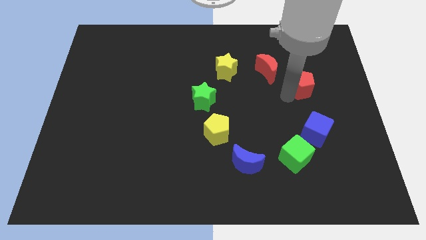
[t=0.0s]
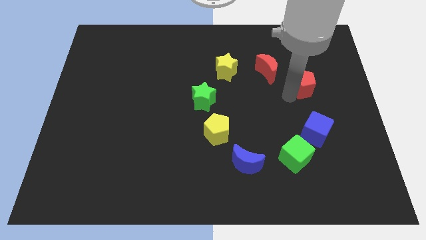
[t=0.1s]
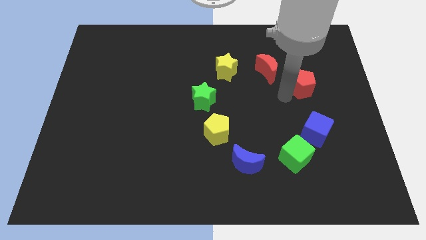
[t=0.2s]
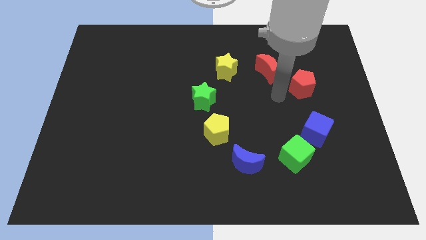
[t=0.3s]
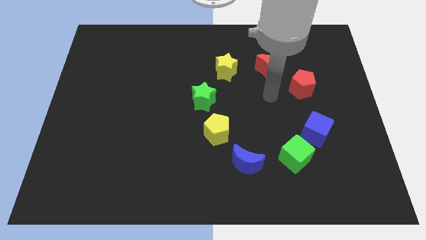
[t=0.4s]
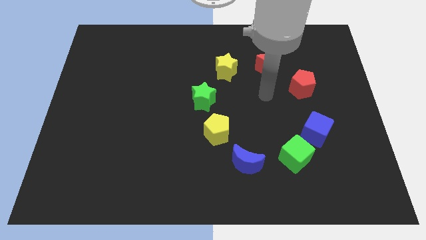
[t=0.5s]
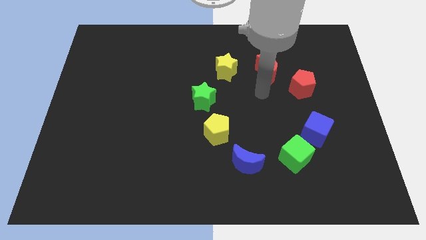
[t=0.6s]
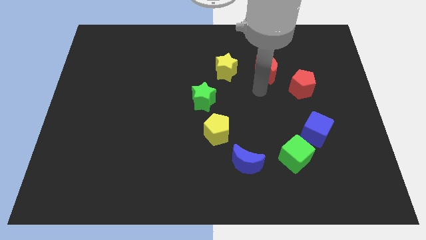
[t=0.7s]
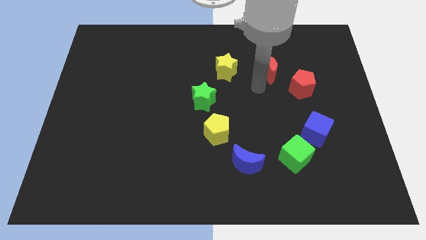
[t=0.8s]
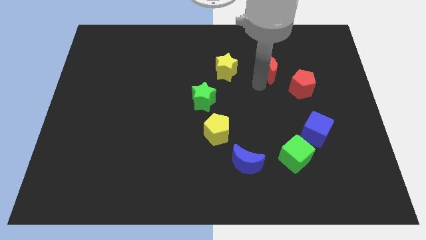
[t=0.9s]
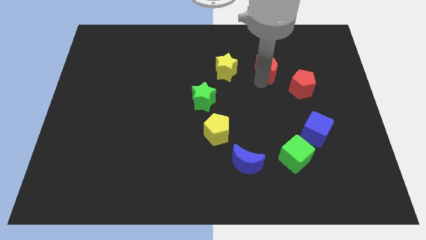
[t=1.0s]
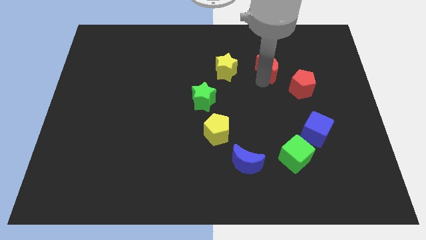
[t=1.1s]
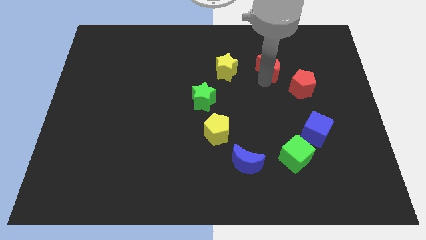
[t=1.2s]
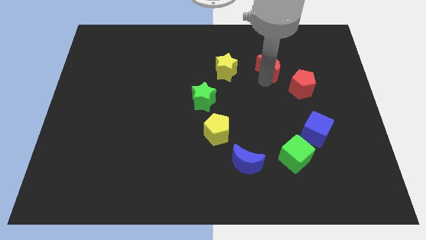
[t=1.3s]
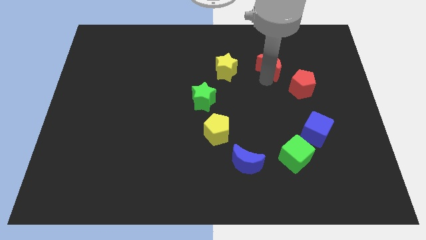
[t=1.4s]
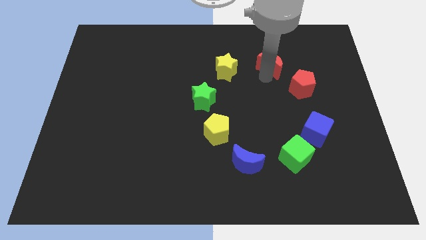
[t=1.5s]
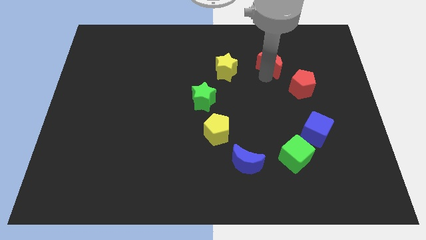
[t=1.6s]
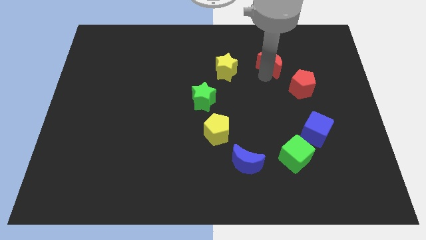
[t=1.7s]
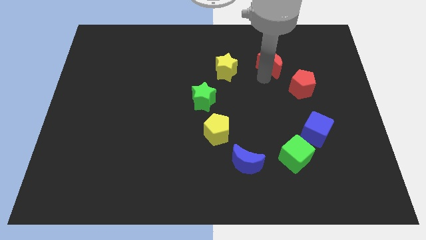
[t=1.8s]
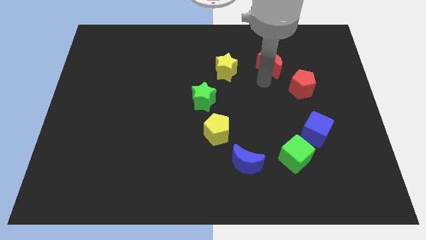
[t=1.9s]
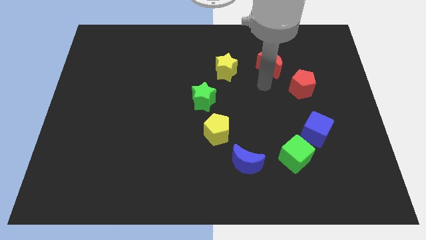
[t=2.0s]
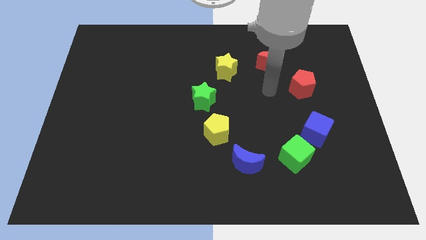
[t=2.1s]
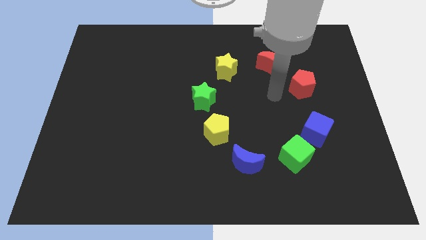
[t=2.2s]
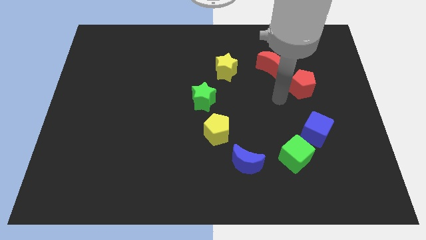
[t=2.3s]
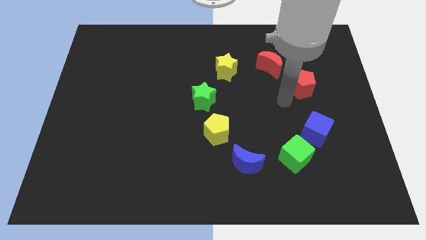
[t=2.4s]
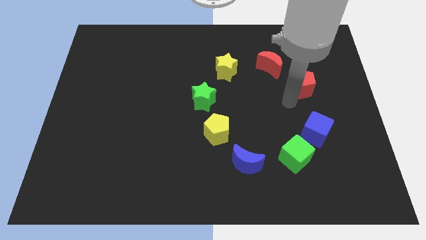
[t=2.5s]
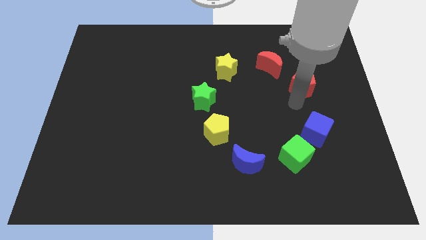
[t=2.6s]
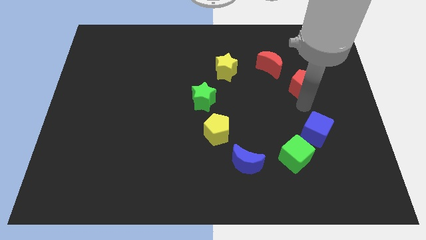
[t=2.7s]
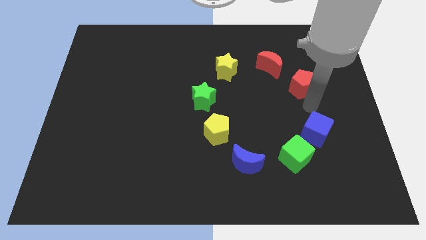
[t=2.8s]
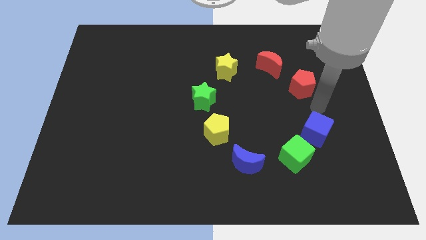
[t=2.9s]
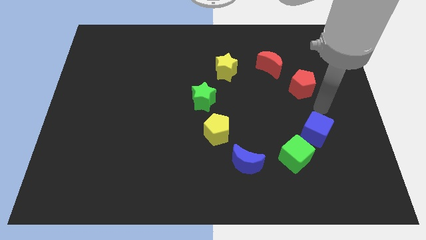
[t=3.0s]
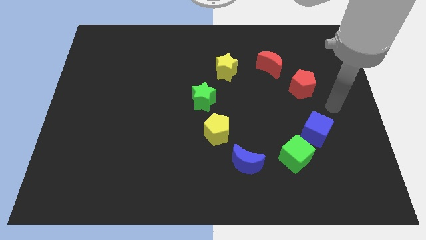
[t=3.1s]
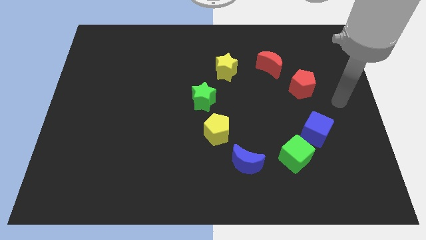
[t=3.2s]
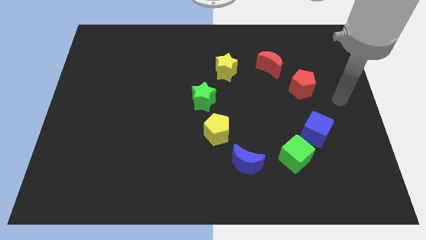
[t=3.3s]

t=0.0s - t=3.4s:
push the red moon slightly upward

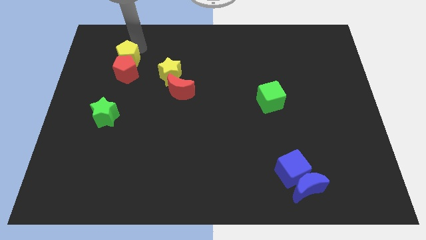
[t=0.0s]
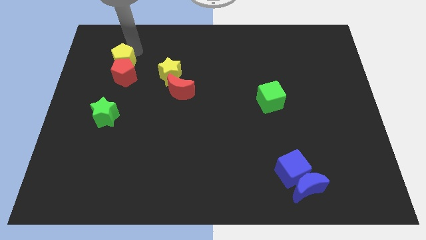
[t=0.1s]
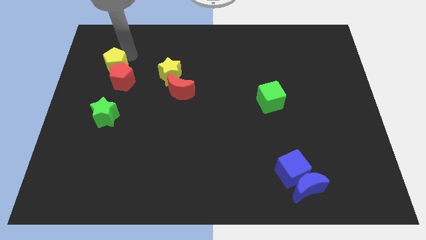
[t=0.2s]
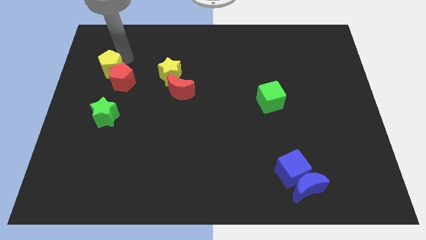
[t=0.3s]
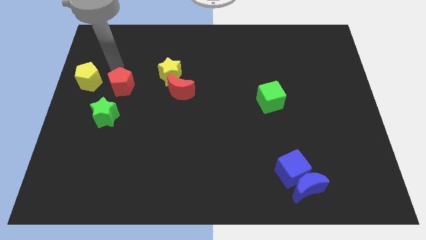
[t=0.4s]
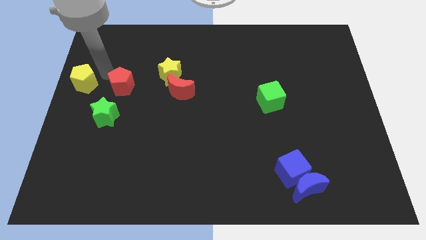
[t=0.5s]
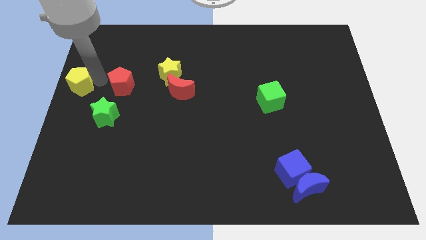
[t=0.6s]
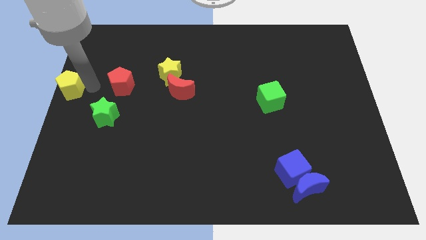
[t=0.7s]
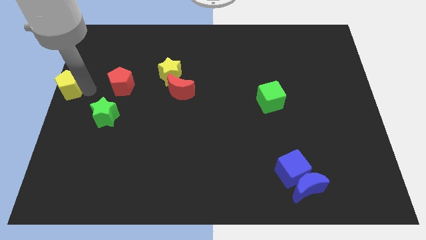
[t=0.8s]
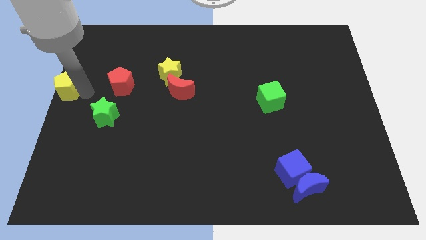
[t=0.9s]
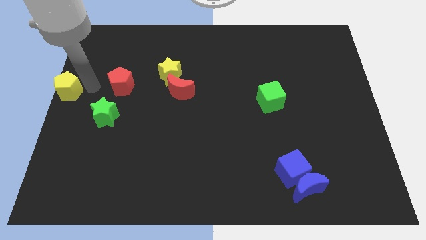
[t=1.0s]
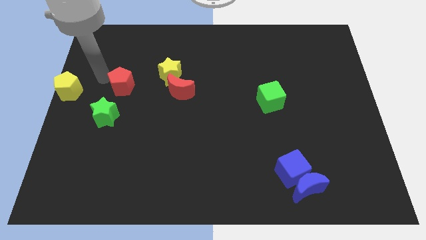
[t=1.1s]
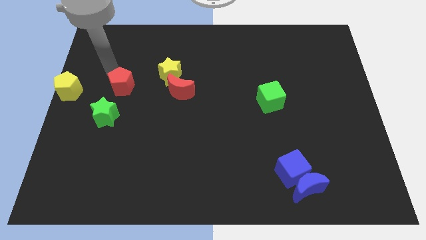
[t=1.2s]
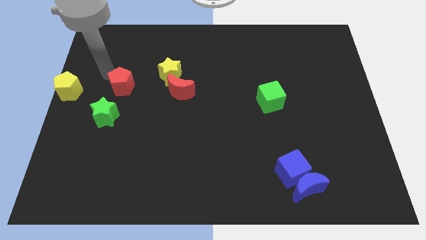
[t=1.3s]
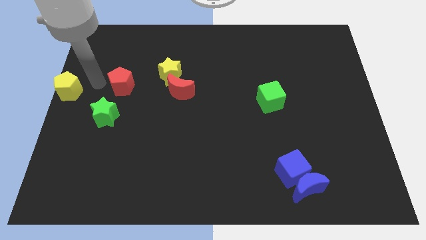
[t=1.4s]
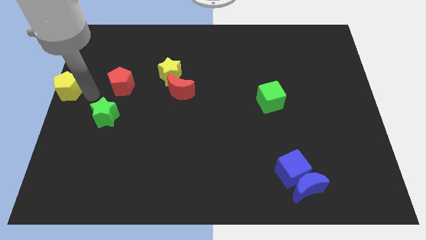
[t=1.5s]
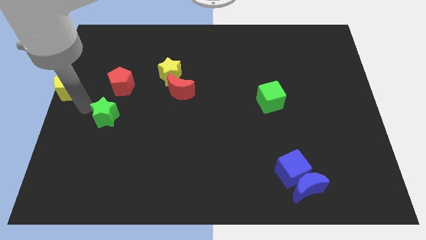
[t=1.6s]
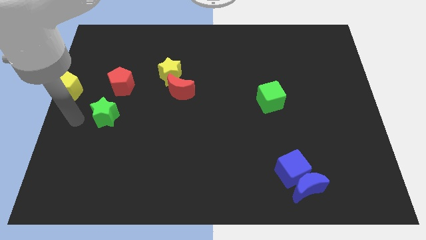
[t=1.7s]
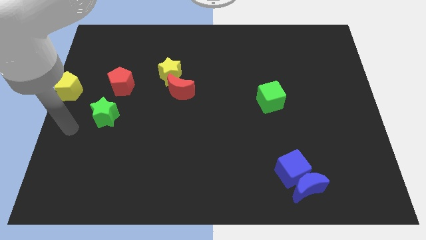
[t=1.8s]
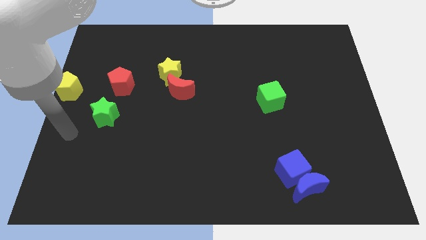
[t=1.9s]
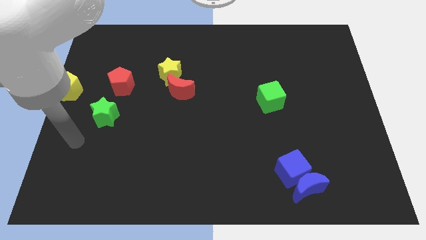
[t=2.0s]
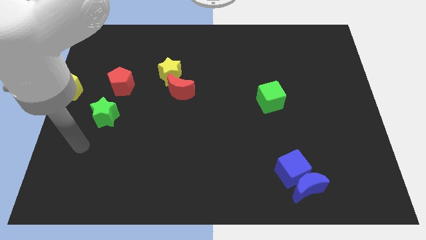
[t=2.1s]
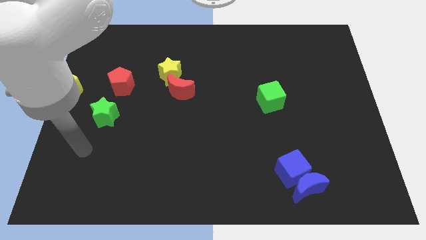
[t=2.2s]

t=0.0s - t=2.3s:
place the yellow pentagon to the left of the red pentagon

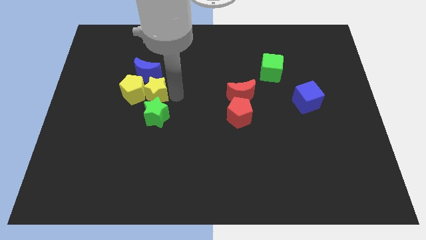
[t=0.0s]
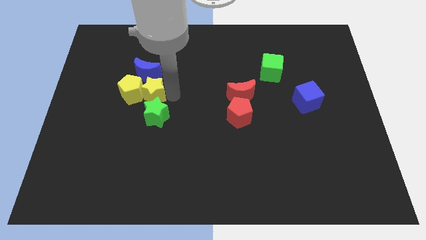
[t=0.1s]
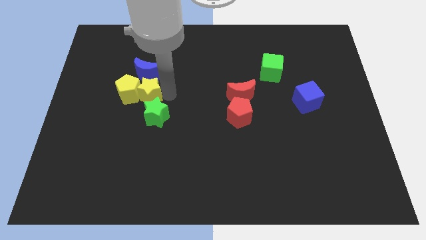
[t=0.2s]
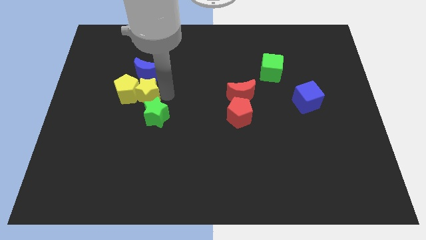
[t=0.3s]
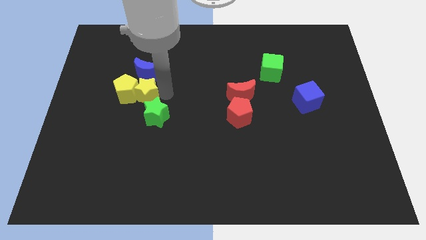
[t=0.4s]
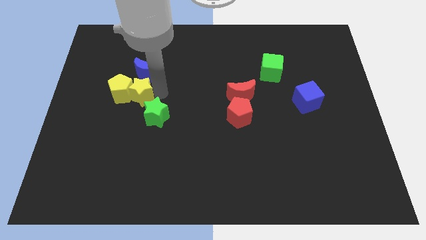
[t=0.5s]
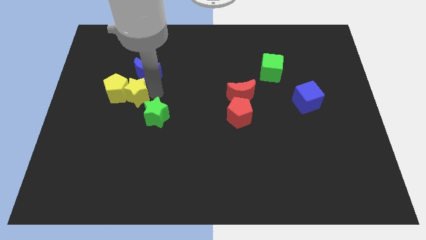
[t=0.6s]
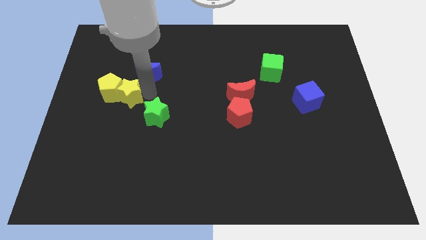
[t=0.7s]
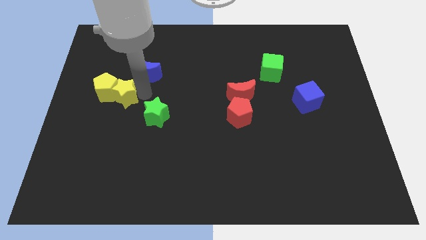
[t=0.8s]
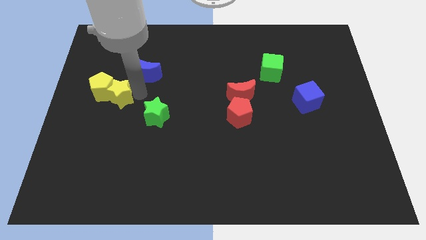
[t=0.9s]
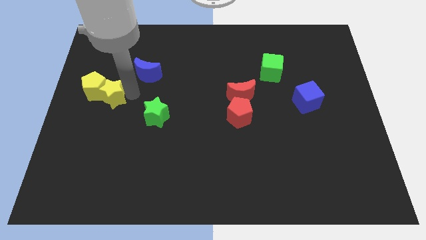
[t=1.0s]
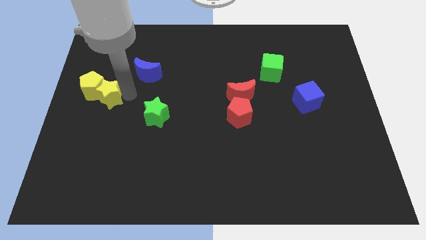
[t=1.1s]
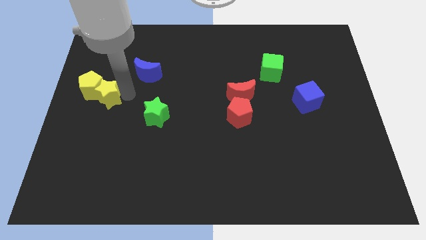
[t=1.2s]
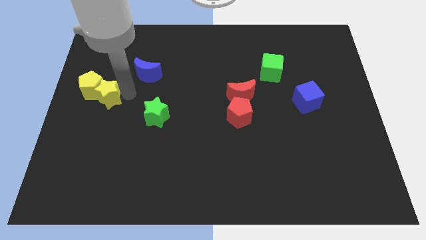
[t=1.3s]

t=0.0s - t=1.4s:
slide the yellow blocks to the left side of the table

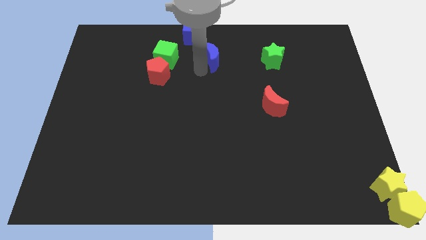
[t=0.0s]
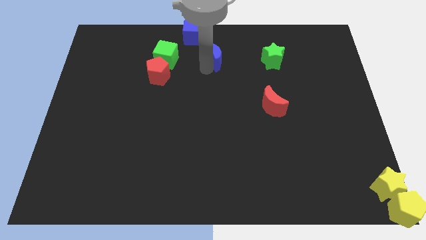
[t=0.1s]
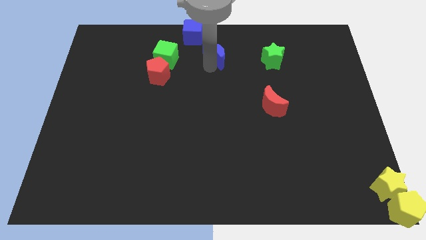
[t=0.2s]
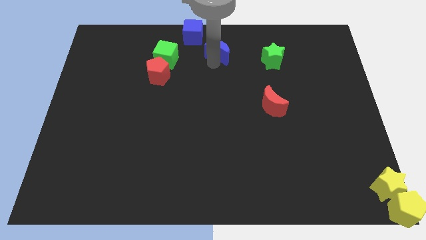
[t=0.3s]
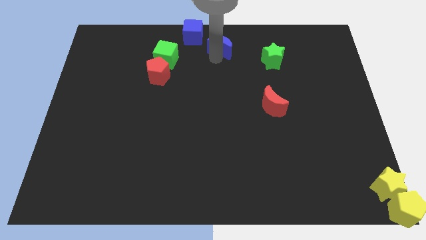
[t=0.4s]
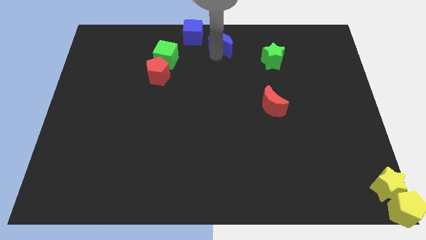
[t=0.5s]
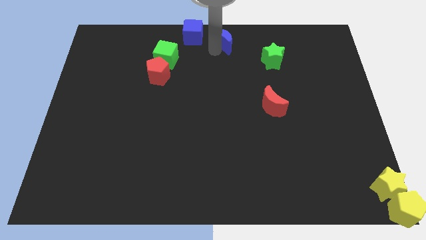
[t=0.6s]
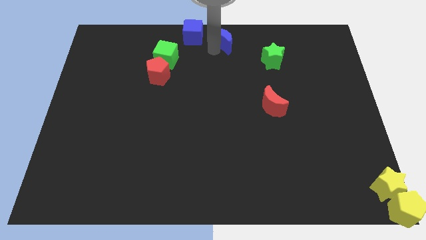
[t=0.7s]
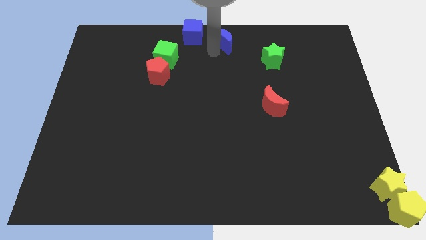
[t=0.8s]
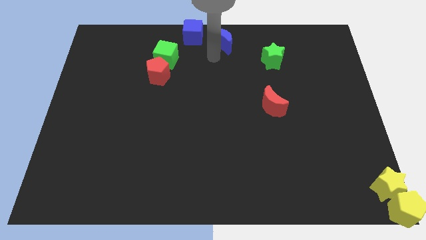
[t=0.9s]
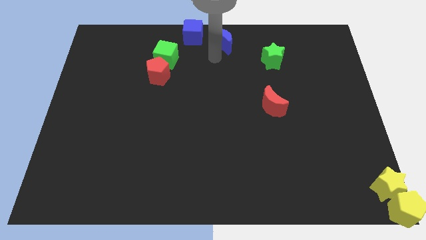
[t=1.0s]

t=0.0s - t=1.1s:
push the blue crescent towards the top center of the board

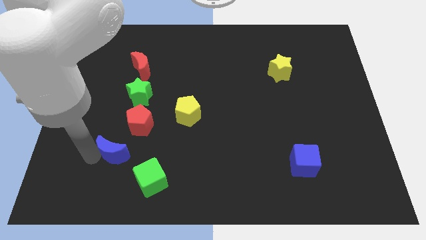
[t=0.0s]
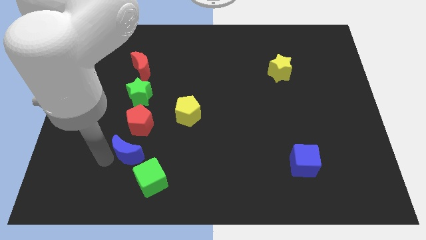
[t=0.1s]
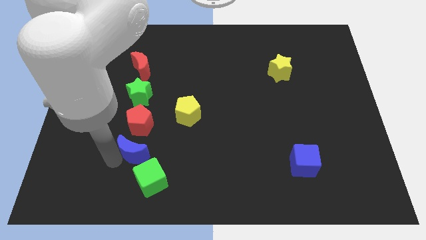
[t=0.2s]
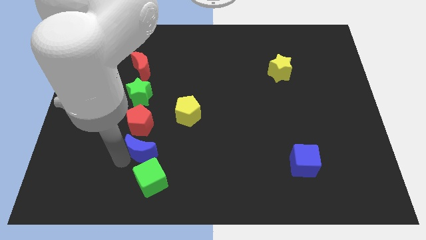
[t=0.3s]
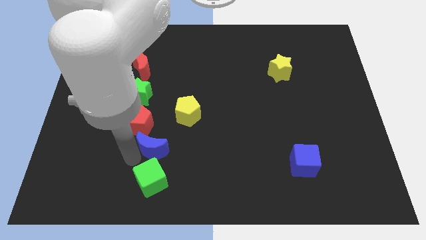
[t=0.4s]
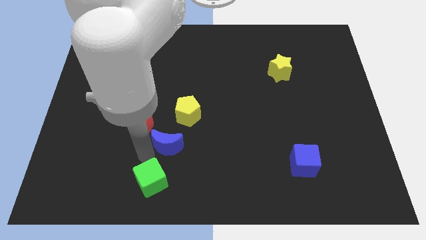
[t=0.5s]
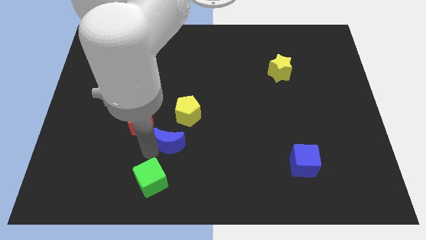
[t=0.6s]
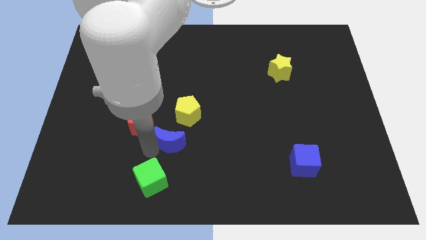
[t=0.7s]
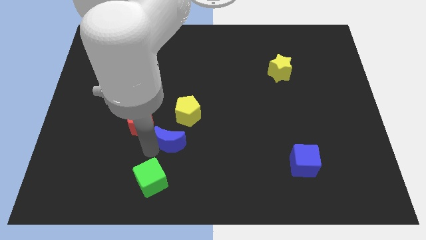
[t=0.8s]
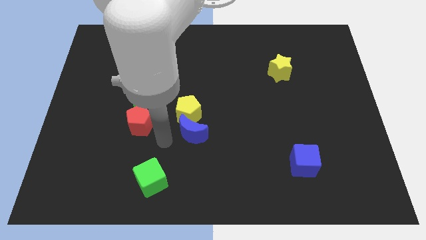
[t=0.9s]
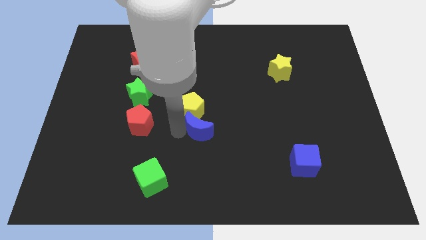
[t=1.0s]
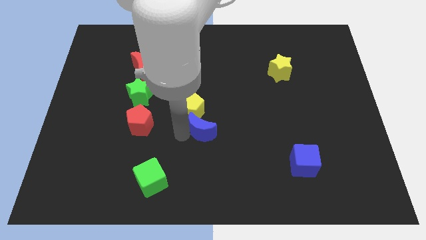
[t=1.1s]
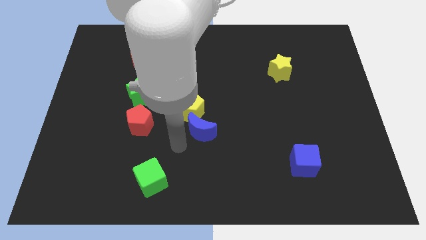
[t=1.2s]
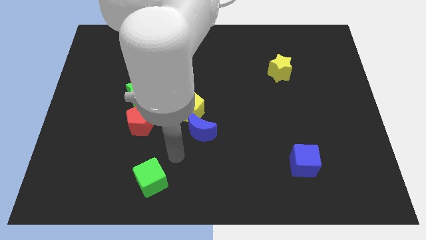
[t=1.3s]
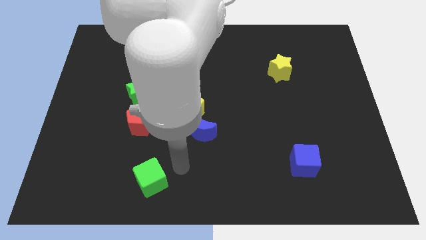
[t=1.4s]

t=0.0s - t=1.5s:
place blue moon to the bottom of yellow pentagon
